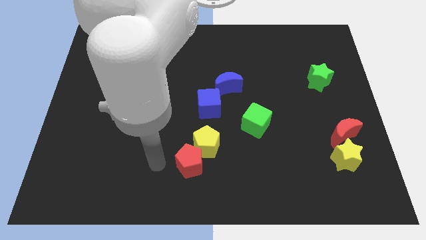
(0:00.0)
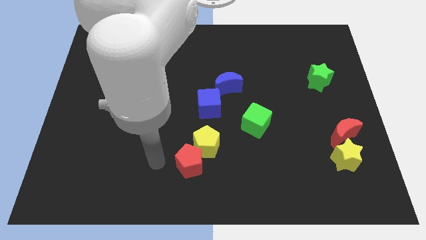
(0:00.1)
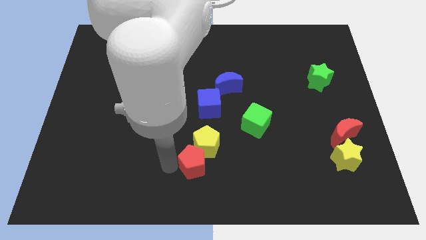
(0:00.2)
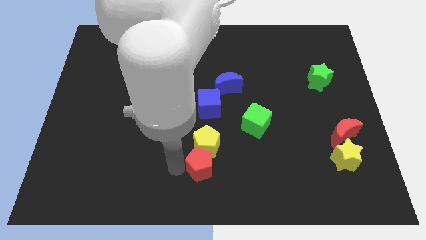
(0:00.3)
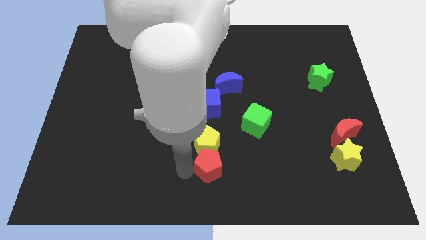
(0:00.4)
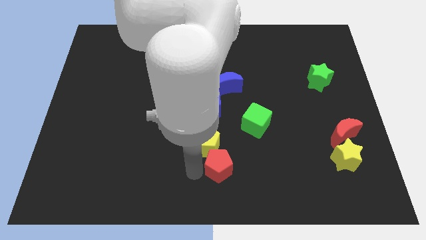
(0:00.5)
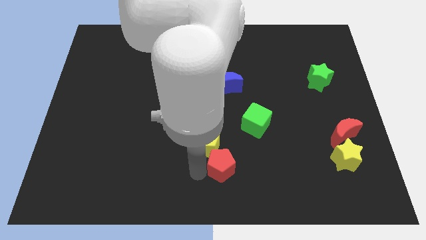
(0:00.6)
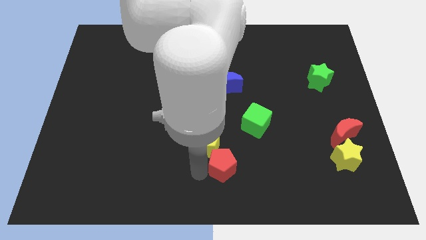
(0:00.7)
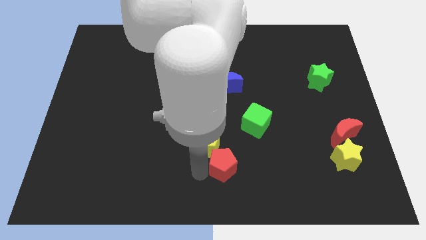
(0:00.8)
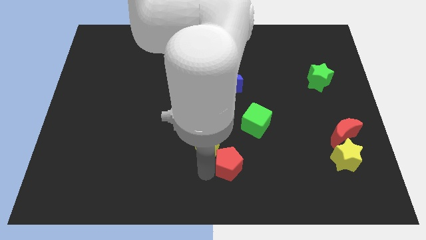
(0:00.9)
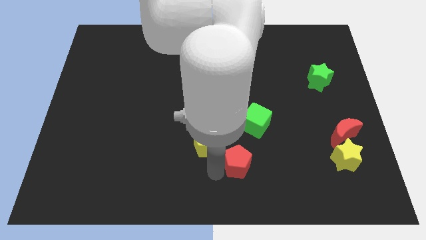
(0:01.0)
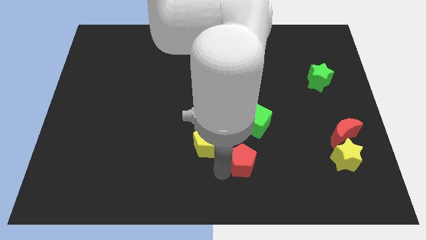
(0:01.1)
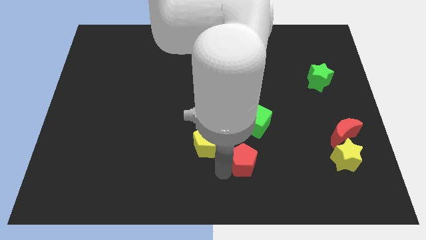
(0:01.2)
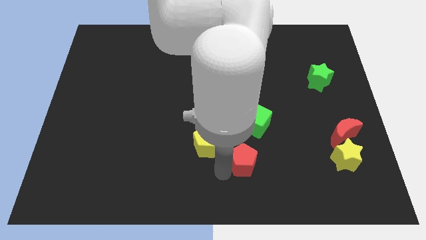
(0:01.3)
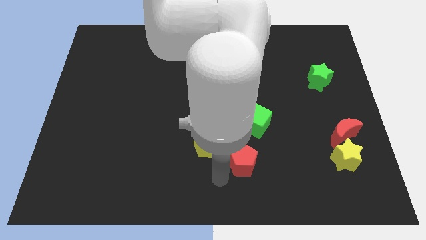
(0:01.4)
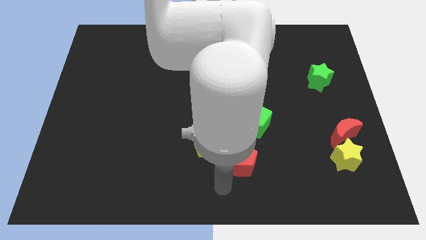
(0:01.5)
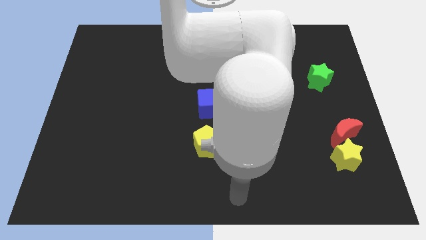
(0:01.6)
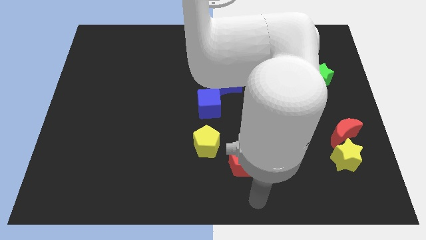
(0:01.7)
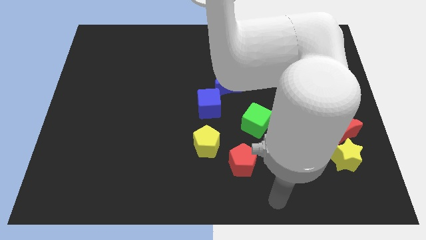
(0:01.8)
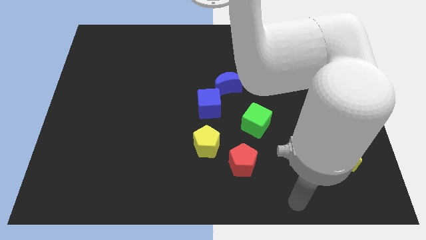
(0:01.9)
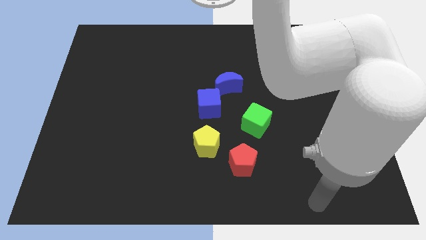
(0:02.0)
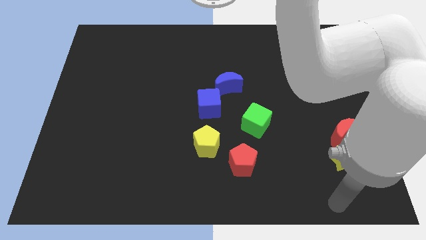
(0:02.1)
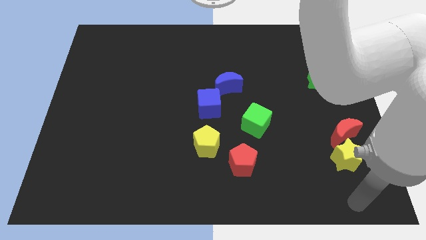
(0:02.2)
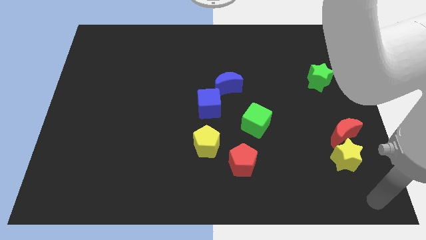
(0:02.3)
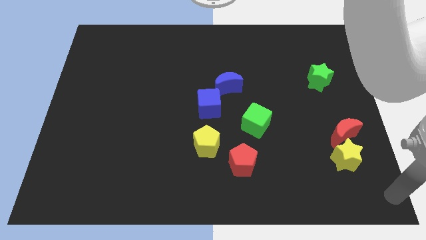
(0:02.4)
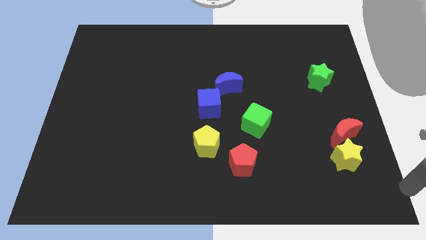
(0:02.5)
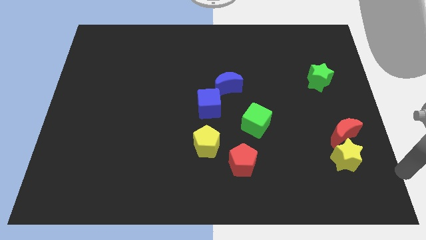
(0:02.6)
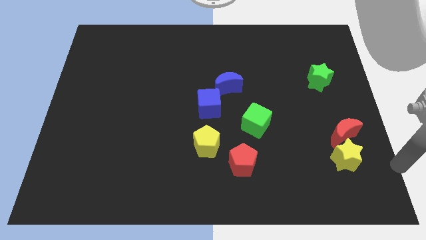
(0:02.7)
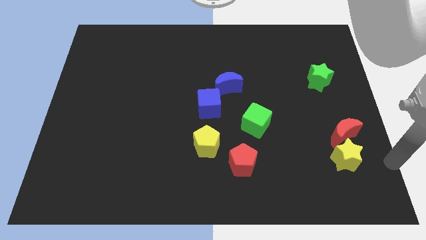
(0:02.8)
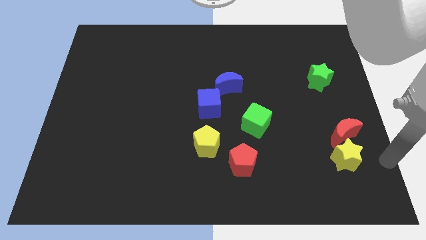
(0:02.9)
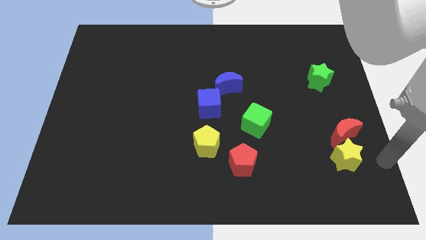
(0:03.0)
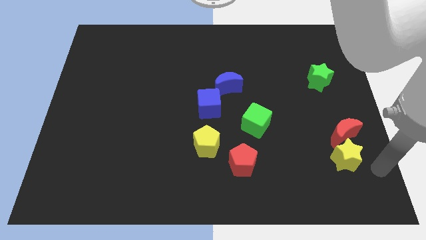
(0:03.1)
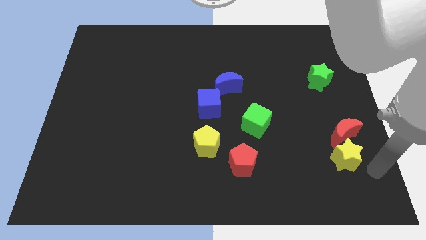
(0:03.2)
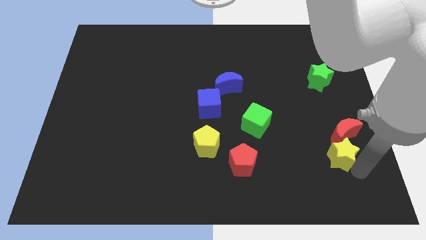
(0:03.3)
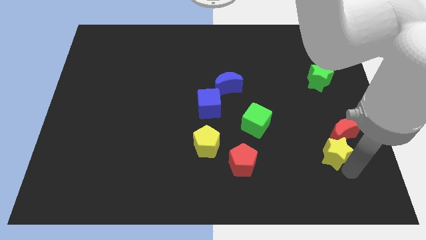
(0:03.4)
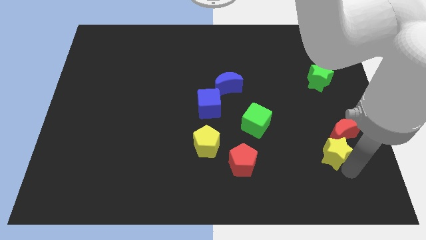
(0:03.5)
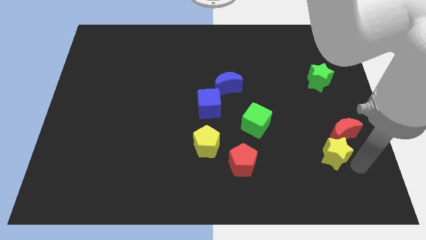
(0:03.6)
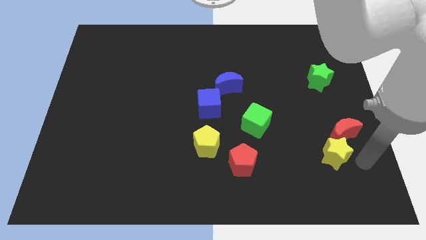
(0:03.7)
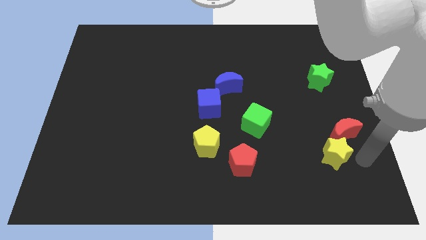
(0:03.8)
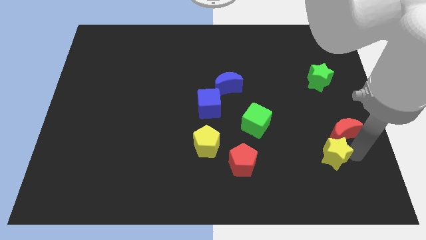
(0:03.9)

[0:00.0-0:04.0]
separate red pentagon from yellow pentagon

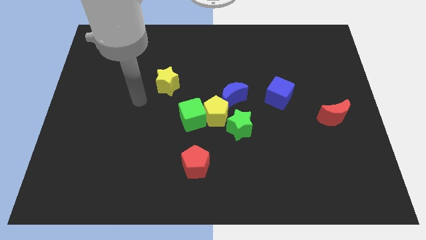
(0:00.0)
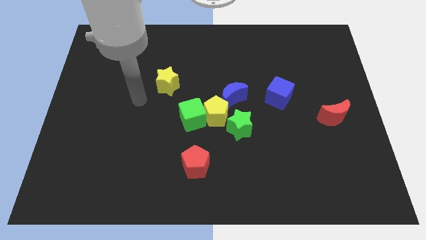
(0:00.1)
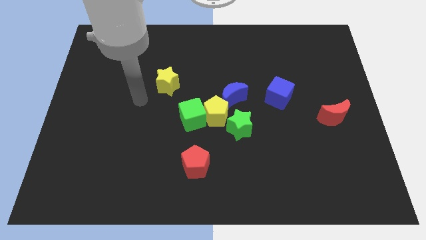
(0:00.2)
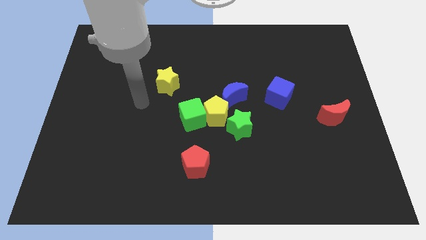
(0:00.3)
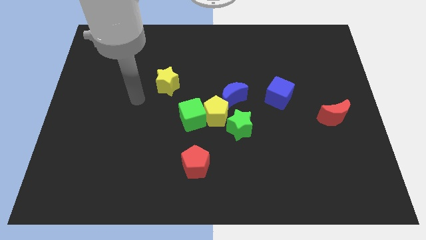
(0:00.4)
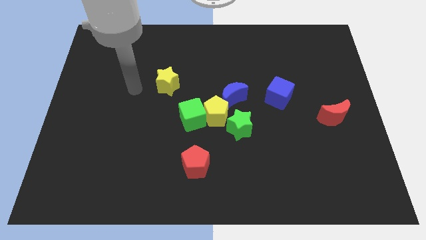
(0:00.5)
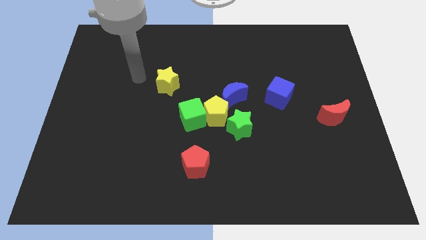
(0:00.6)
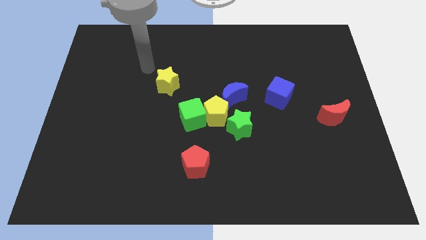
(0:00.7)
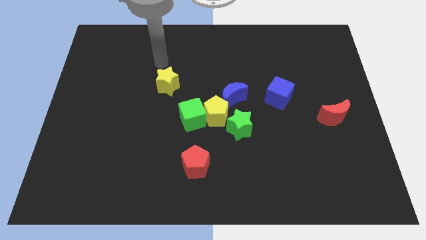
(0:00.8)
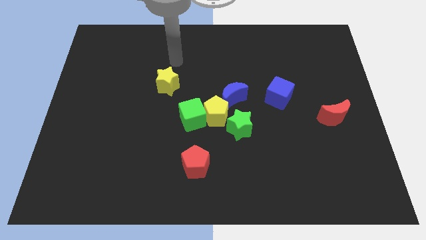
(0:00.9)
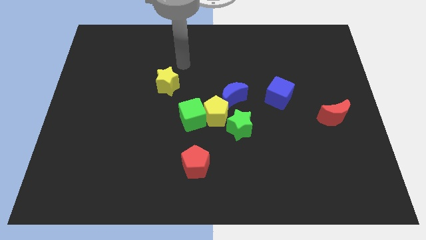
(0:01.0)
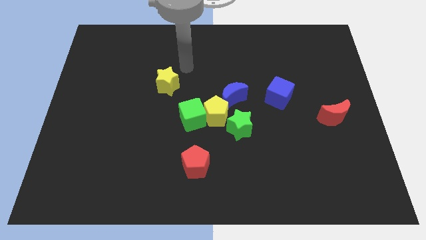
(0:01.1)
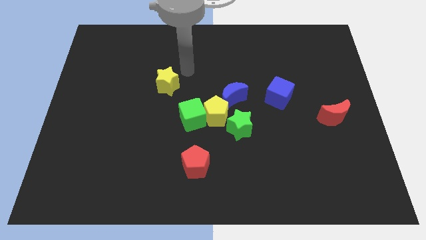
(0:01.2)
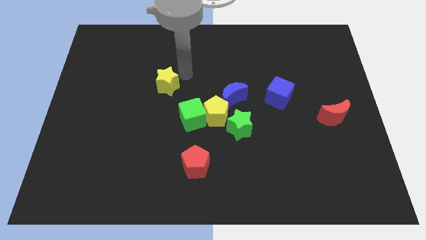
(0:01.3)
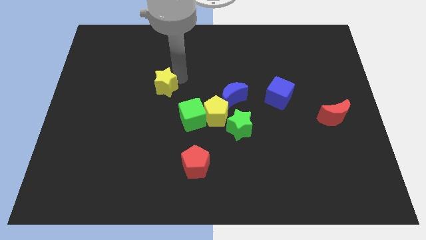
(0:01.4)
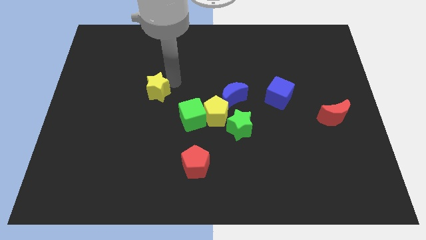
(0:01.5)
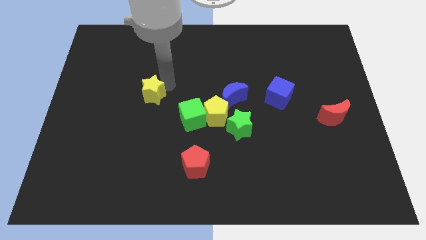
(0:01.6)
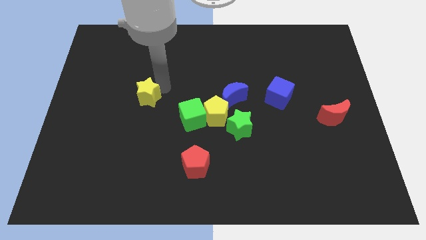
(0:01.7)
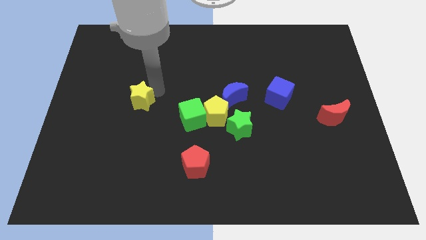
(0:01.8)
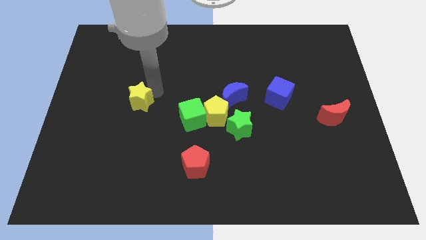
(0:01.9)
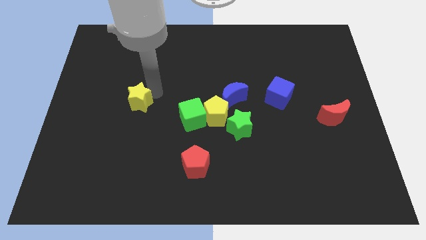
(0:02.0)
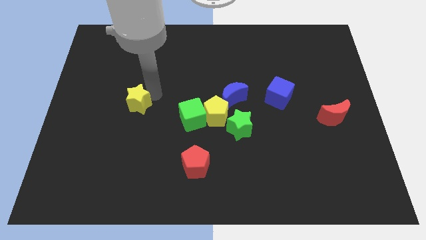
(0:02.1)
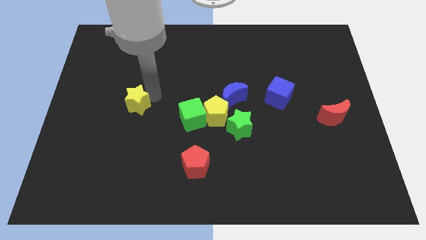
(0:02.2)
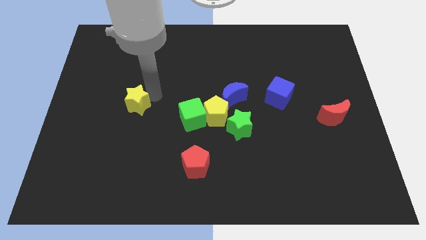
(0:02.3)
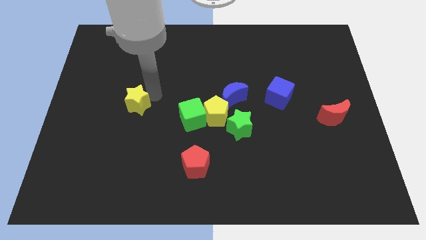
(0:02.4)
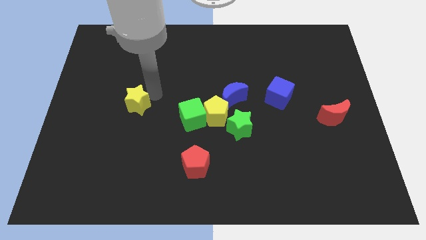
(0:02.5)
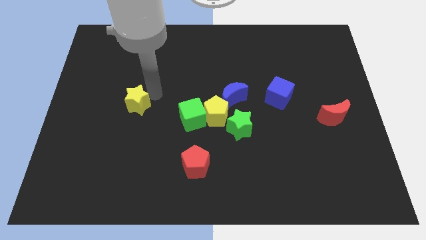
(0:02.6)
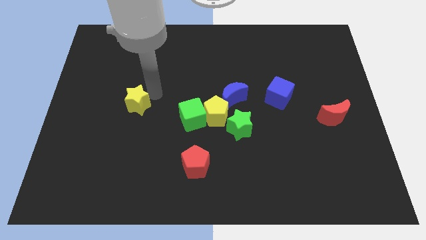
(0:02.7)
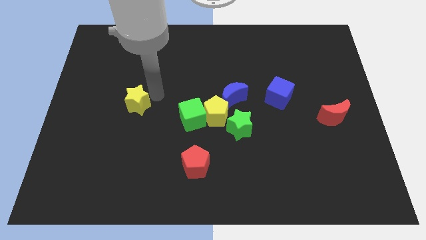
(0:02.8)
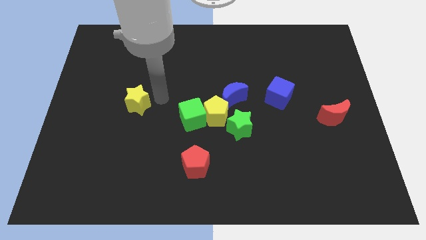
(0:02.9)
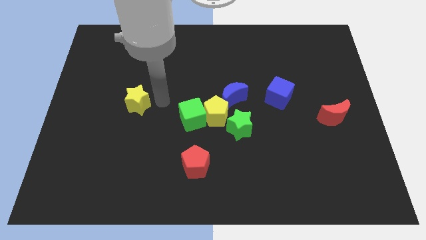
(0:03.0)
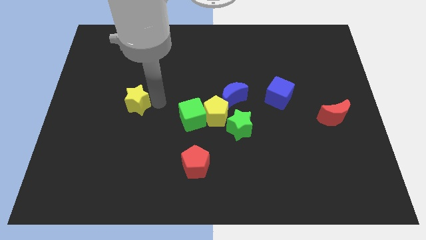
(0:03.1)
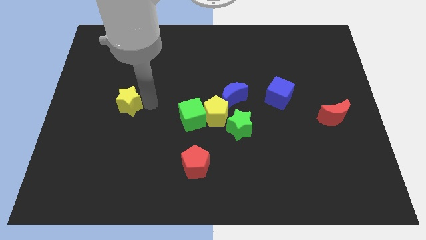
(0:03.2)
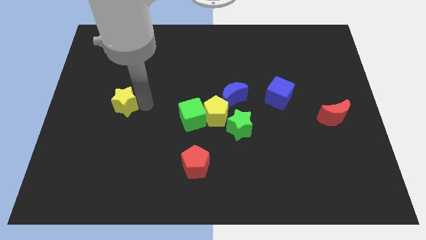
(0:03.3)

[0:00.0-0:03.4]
reposition the yellow star

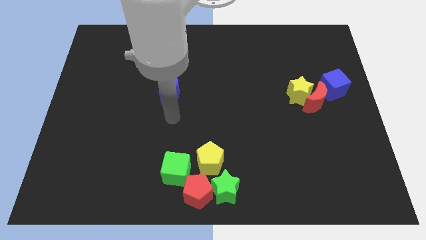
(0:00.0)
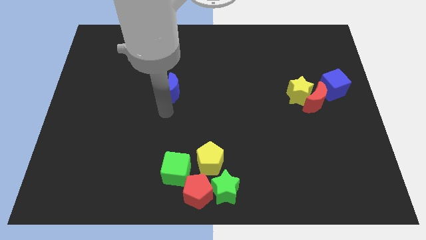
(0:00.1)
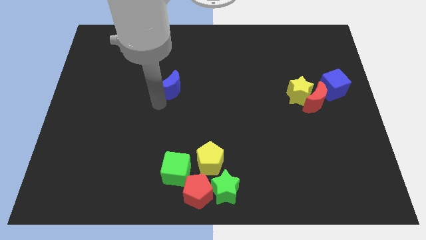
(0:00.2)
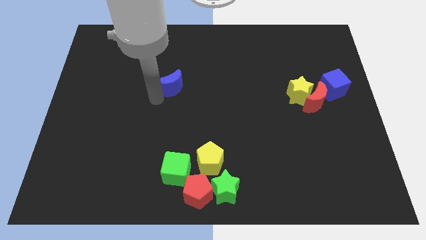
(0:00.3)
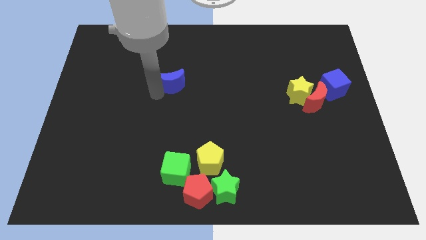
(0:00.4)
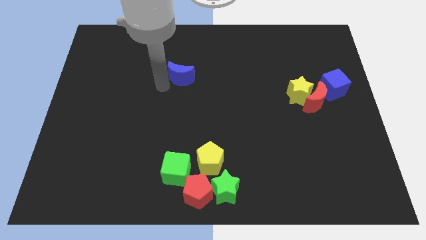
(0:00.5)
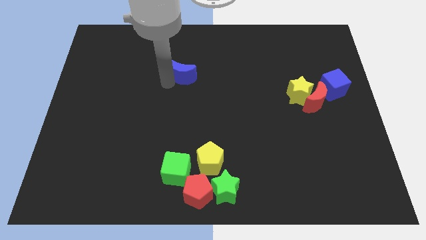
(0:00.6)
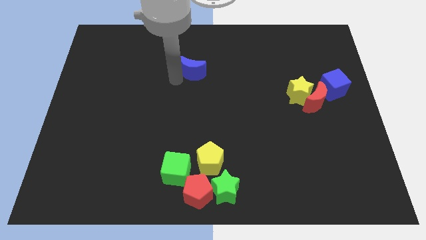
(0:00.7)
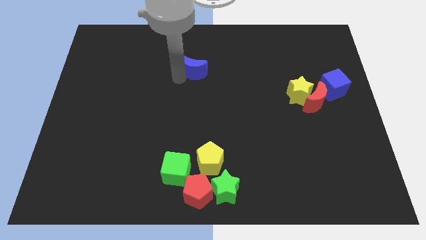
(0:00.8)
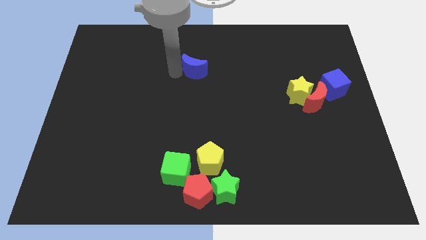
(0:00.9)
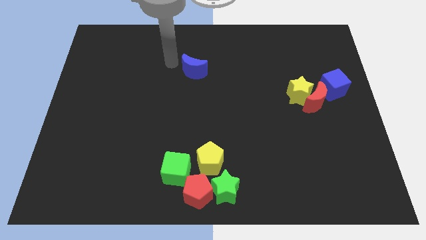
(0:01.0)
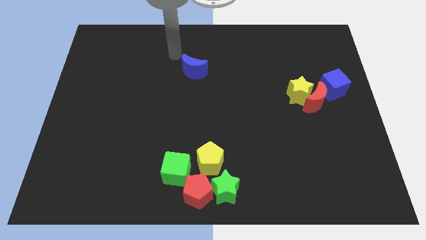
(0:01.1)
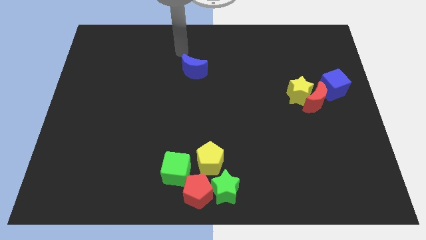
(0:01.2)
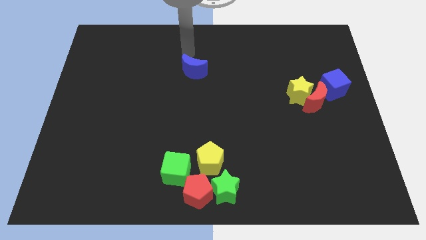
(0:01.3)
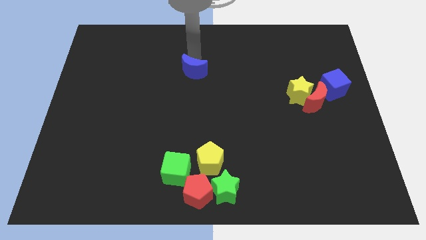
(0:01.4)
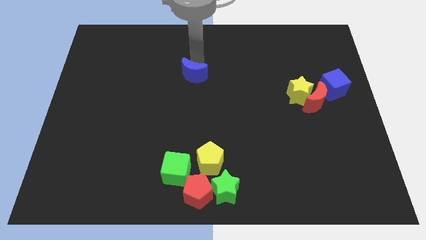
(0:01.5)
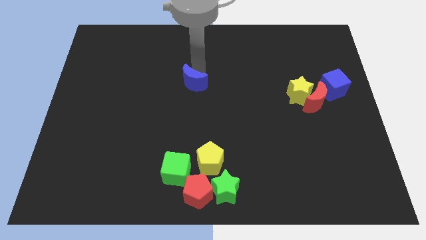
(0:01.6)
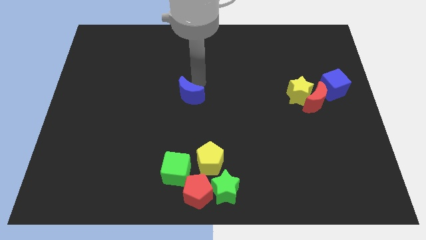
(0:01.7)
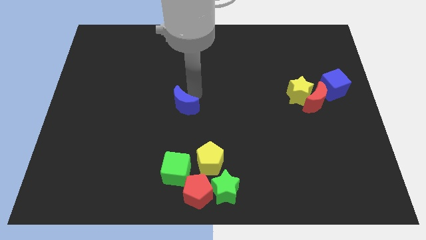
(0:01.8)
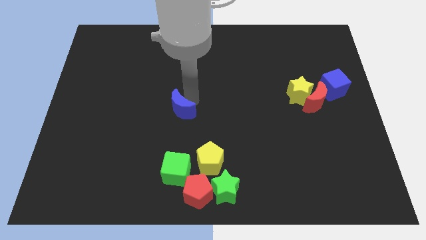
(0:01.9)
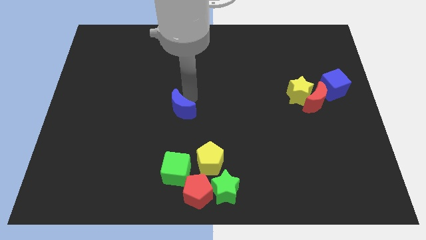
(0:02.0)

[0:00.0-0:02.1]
move the blue moon towards the green cube
